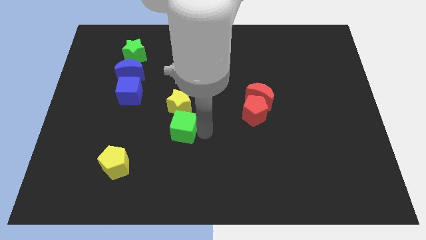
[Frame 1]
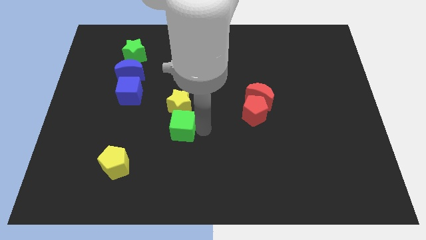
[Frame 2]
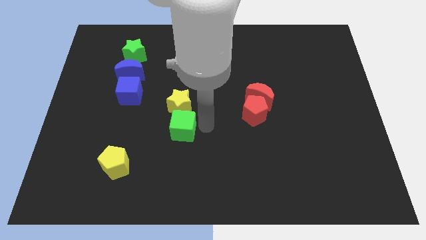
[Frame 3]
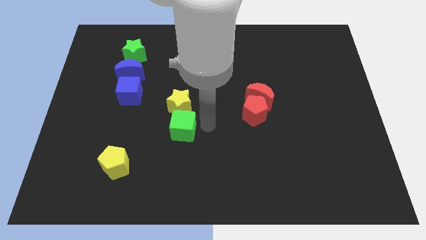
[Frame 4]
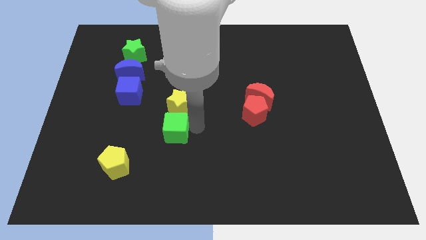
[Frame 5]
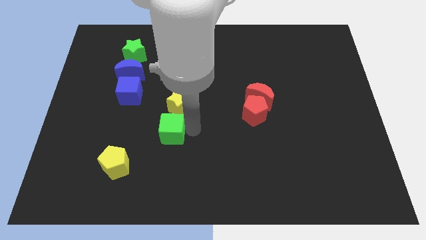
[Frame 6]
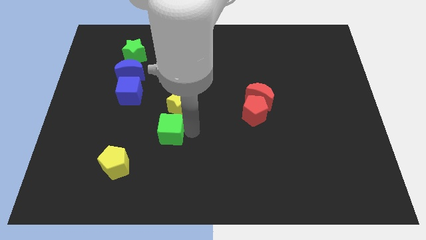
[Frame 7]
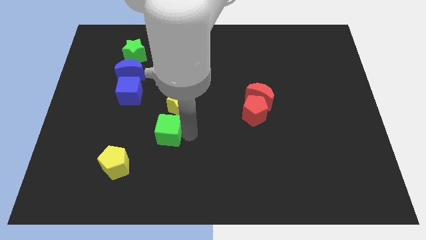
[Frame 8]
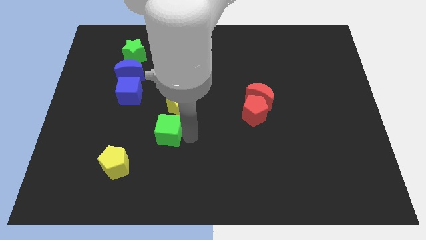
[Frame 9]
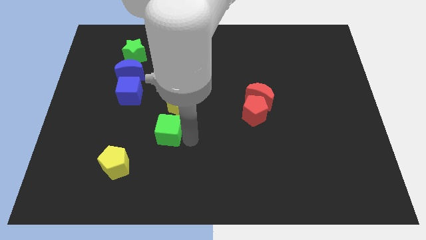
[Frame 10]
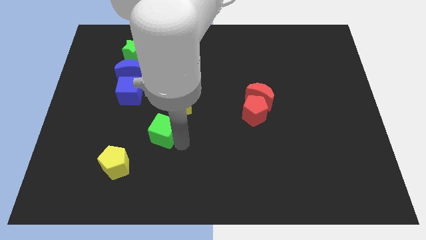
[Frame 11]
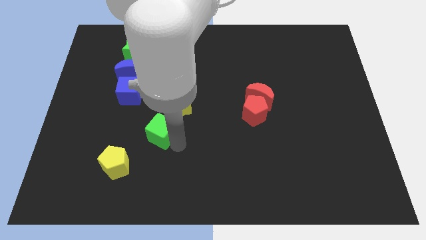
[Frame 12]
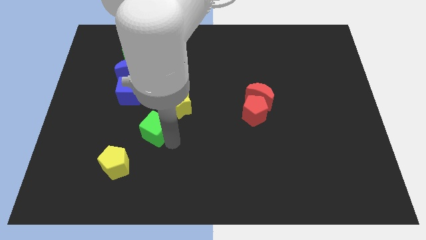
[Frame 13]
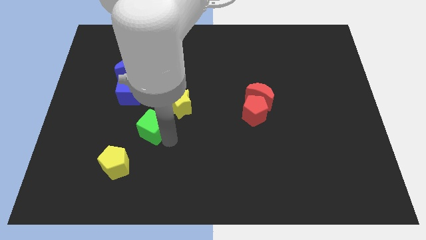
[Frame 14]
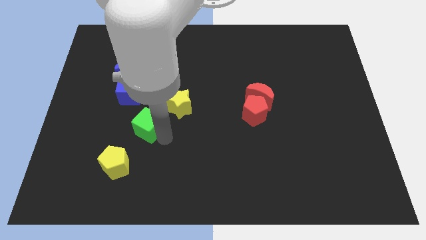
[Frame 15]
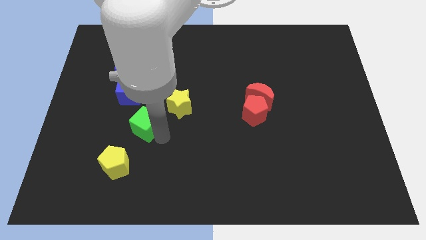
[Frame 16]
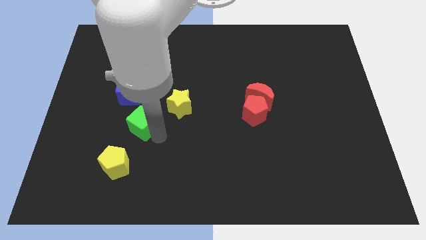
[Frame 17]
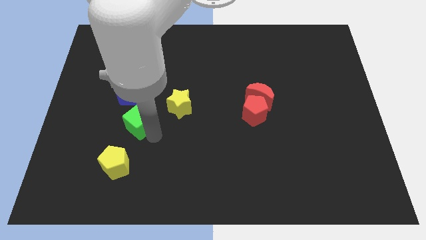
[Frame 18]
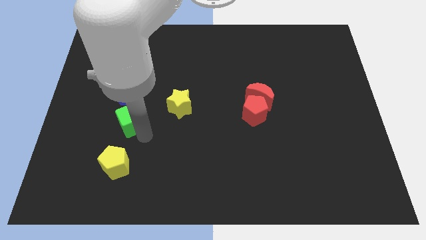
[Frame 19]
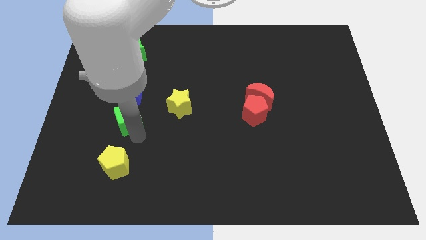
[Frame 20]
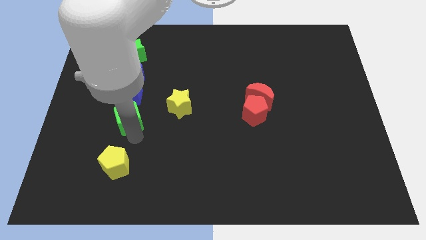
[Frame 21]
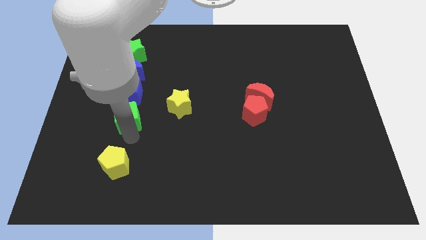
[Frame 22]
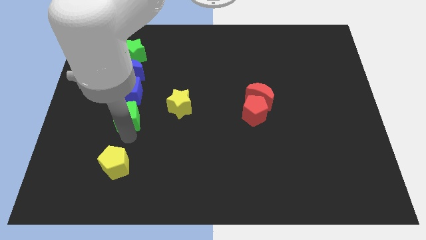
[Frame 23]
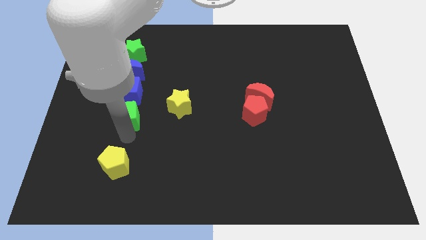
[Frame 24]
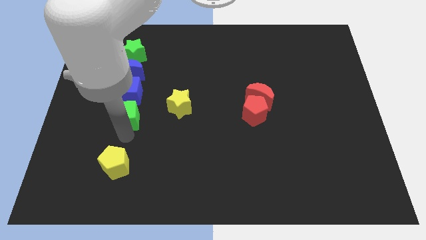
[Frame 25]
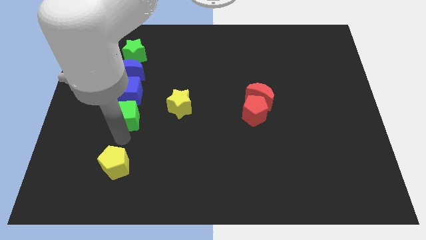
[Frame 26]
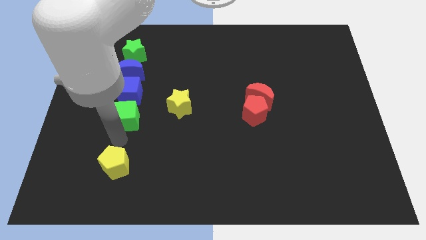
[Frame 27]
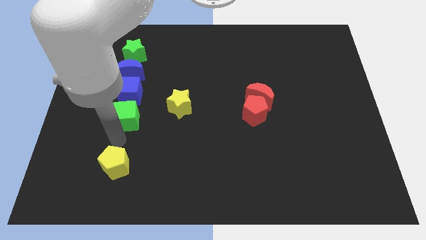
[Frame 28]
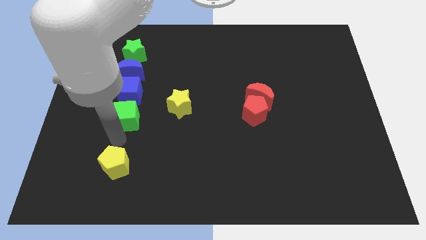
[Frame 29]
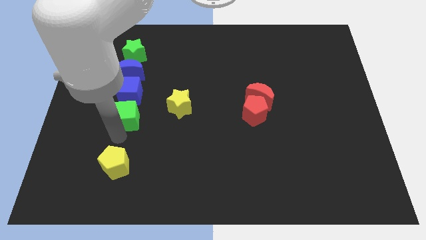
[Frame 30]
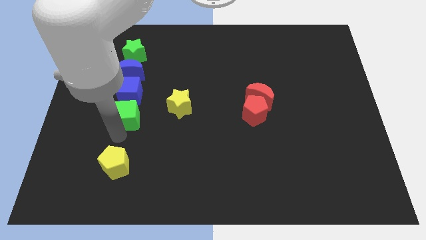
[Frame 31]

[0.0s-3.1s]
place the green cube below the blue cube

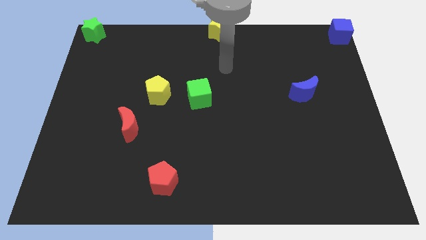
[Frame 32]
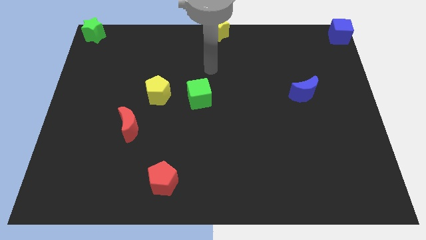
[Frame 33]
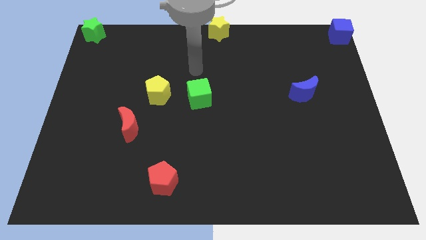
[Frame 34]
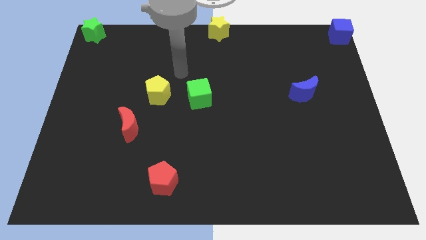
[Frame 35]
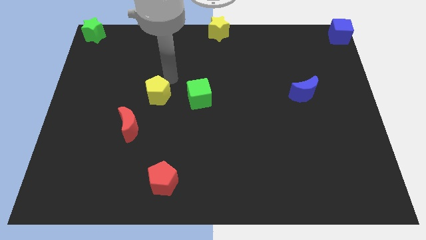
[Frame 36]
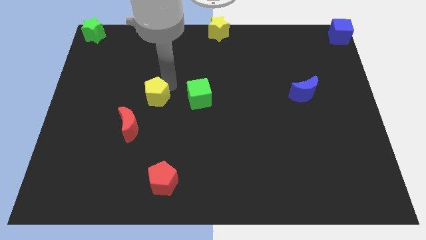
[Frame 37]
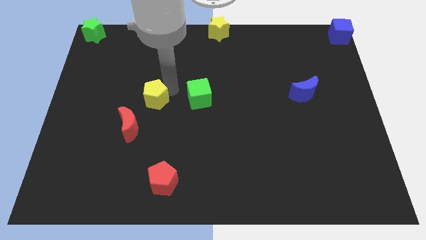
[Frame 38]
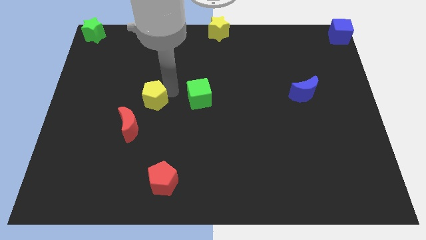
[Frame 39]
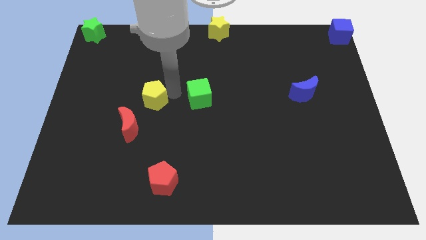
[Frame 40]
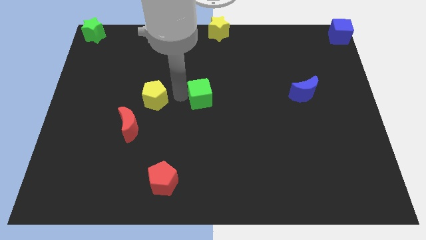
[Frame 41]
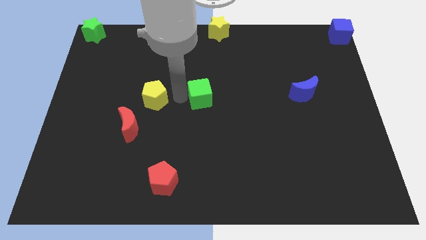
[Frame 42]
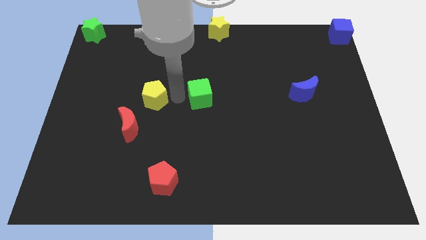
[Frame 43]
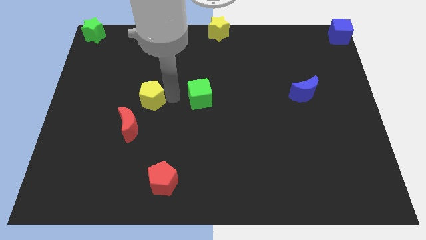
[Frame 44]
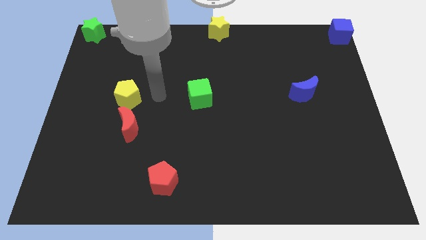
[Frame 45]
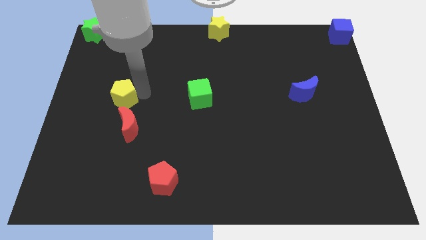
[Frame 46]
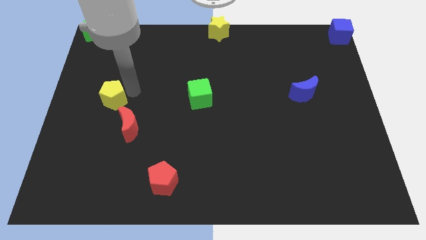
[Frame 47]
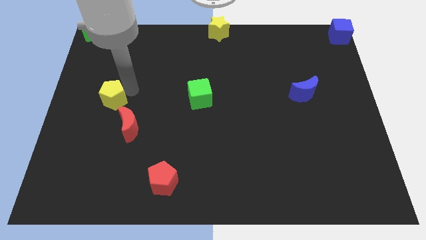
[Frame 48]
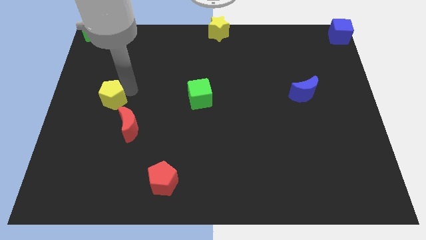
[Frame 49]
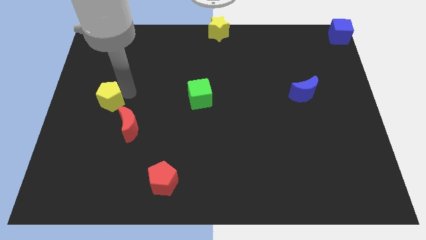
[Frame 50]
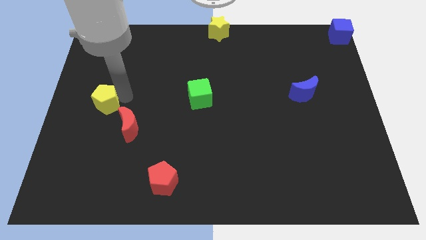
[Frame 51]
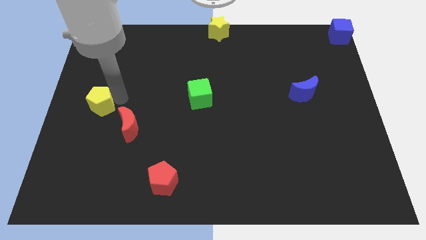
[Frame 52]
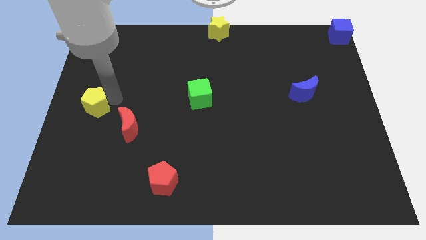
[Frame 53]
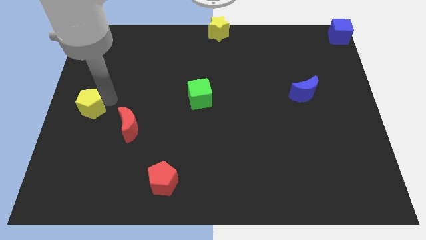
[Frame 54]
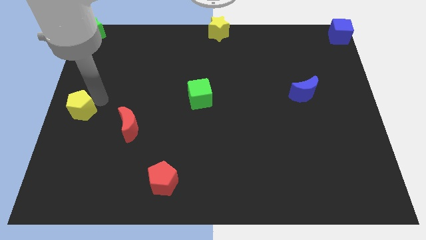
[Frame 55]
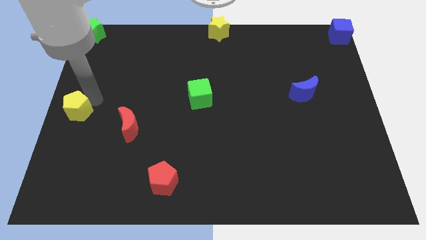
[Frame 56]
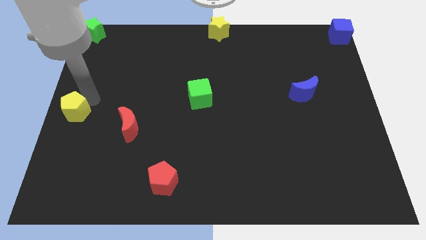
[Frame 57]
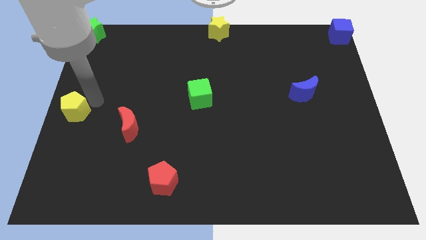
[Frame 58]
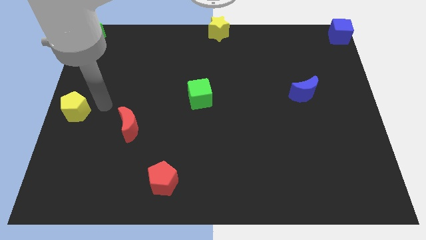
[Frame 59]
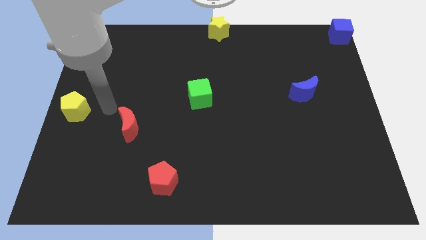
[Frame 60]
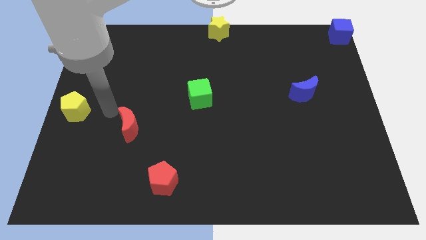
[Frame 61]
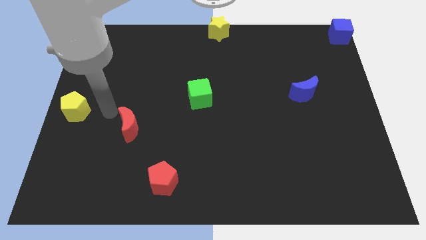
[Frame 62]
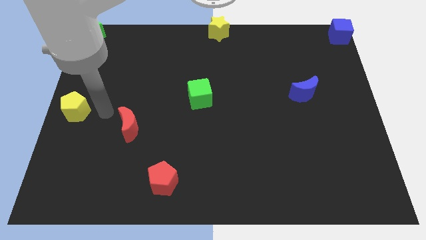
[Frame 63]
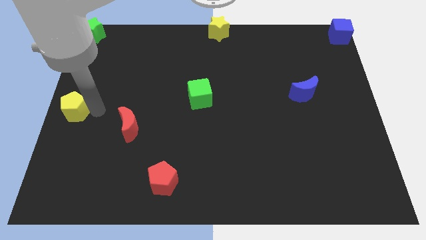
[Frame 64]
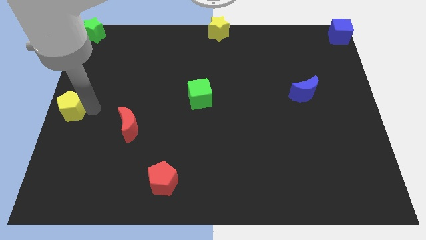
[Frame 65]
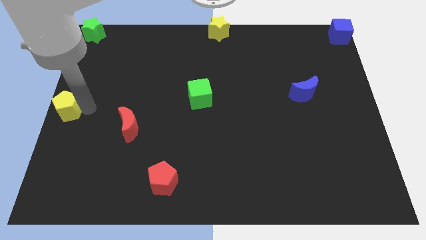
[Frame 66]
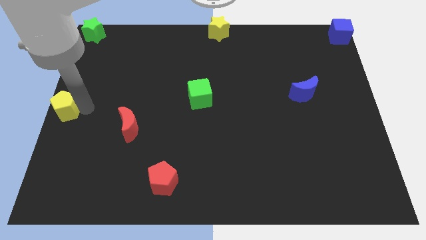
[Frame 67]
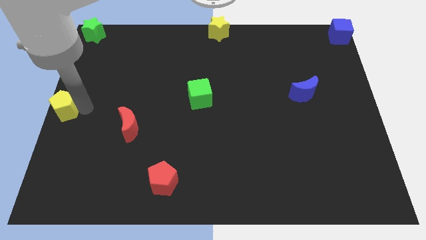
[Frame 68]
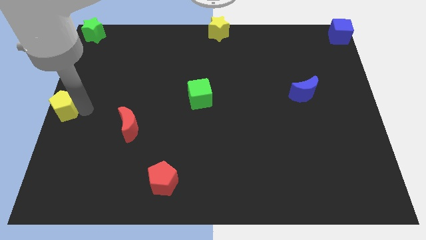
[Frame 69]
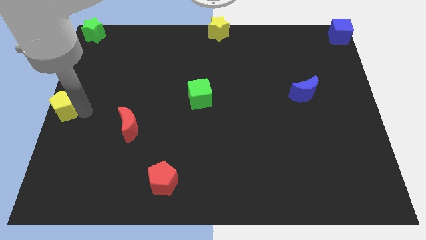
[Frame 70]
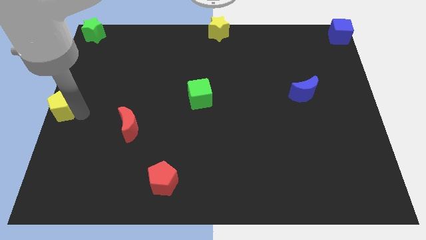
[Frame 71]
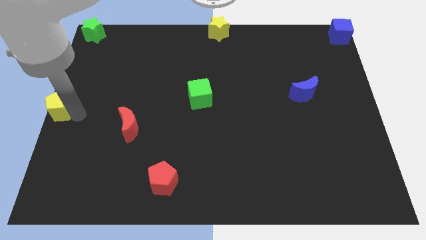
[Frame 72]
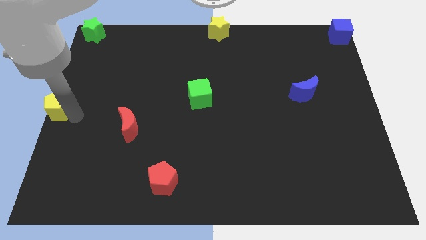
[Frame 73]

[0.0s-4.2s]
push yellow pentagon top the left center

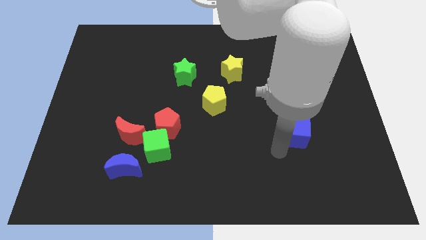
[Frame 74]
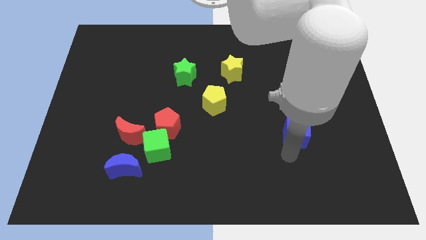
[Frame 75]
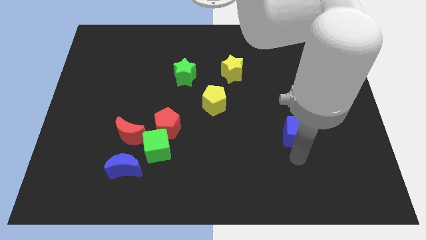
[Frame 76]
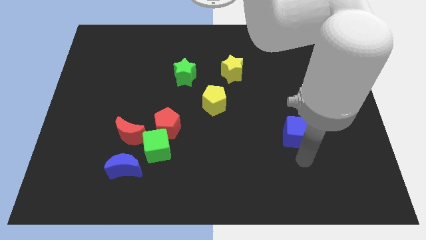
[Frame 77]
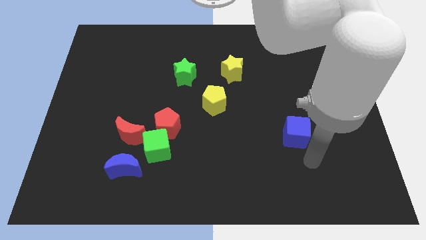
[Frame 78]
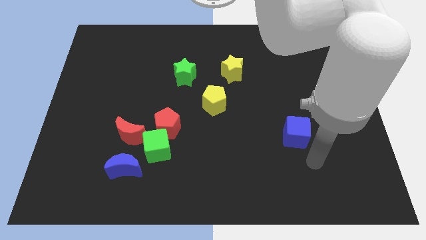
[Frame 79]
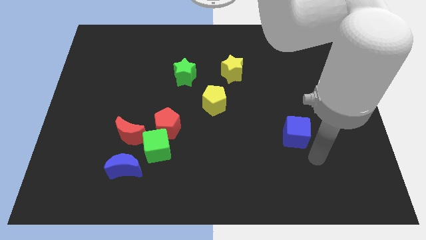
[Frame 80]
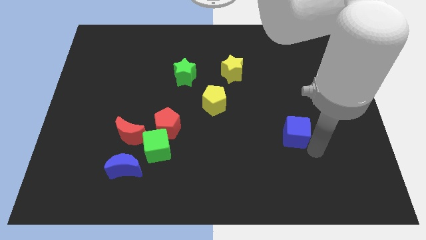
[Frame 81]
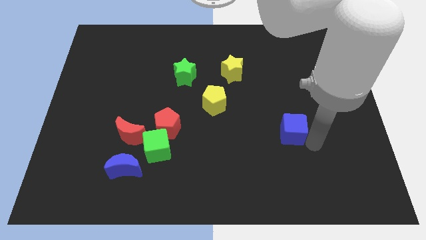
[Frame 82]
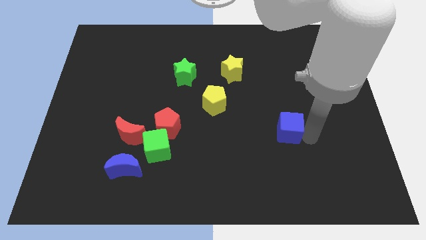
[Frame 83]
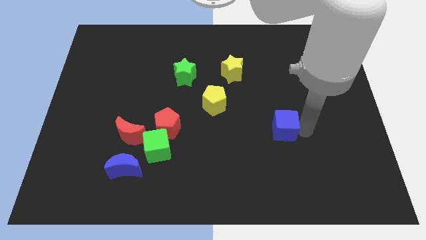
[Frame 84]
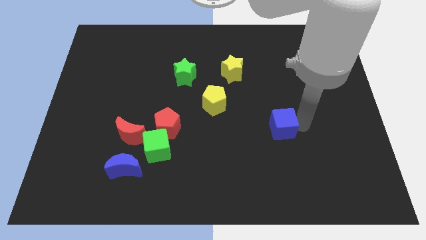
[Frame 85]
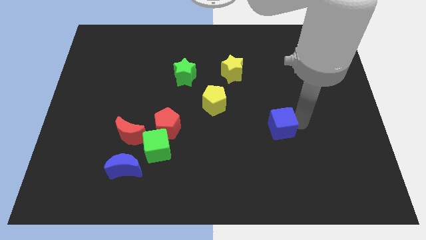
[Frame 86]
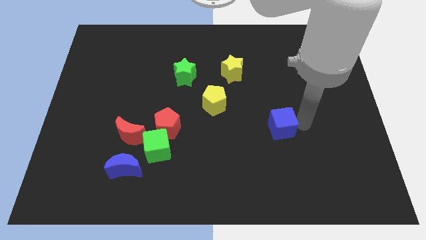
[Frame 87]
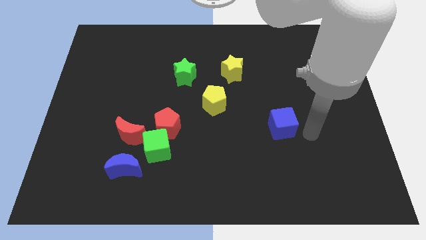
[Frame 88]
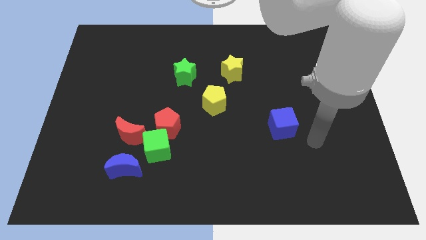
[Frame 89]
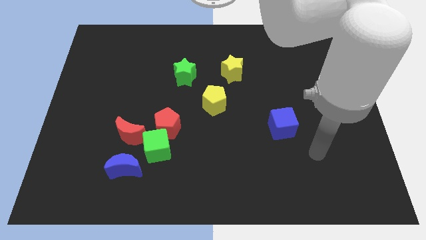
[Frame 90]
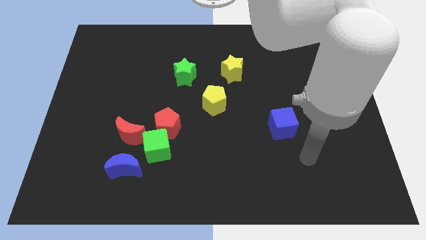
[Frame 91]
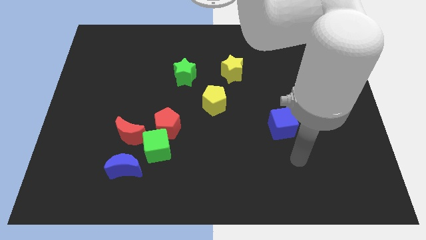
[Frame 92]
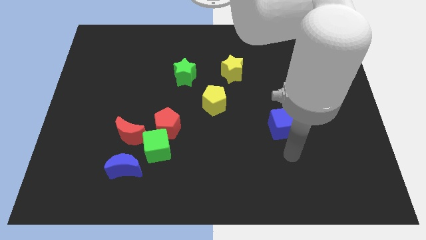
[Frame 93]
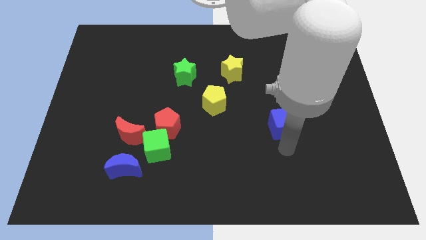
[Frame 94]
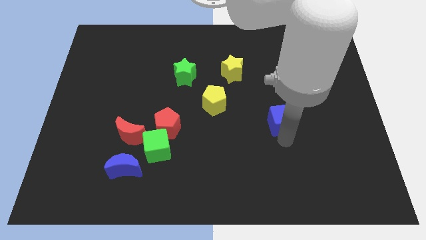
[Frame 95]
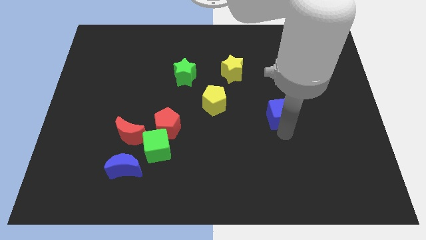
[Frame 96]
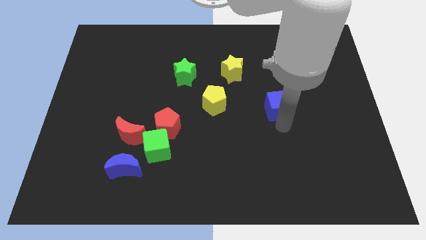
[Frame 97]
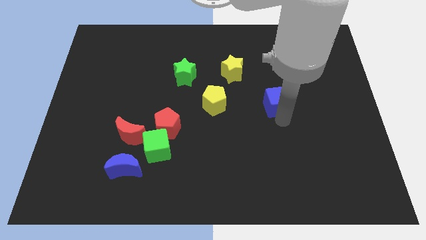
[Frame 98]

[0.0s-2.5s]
move the blue cube to the right of the yellow pentagon
